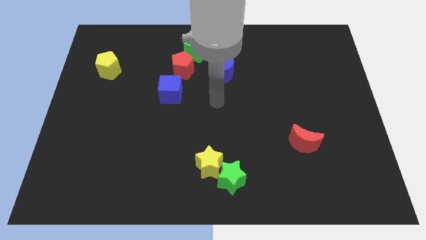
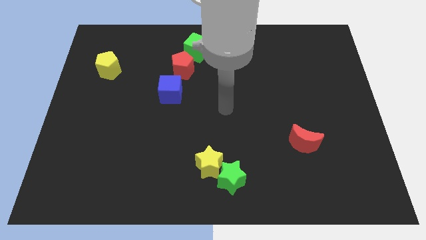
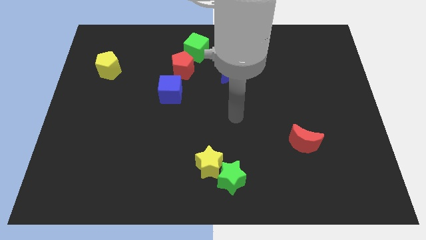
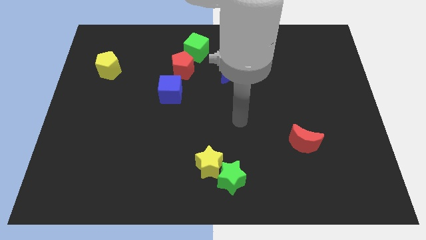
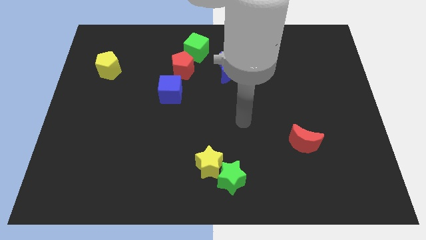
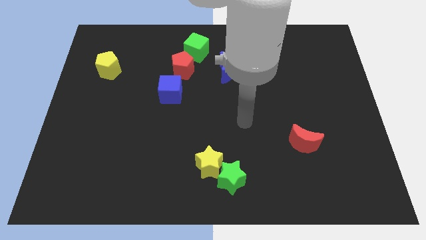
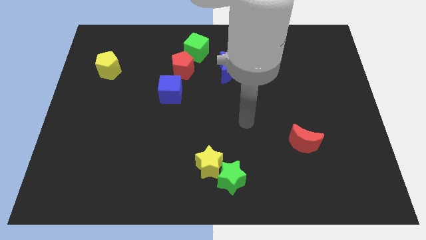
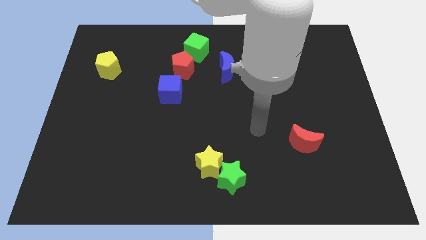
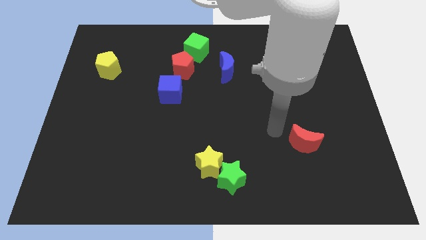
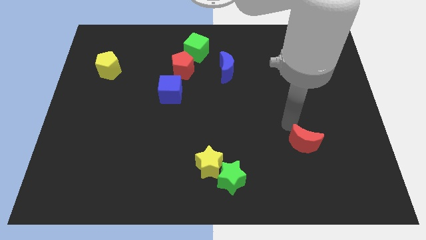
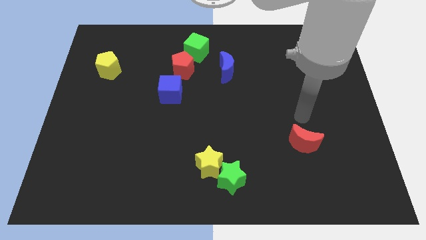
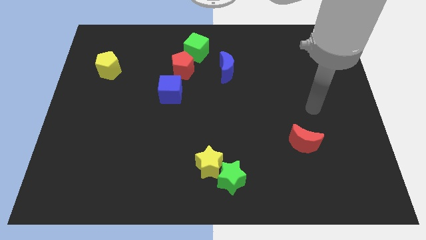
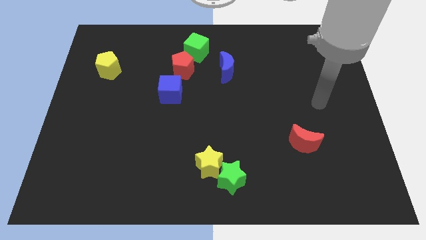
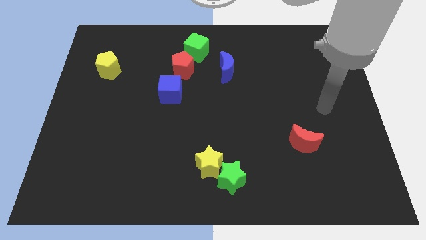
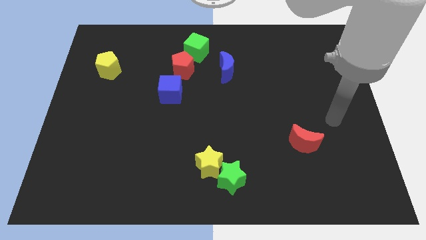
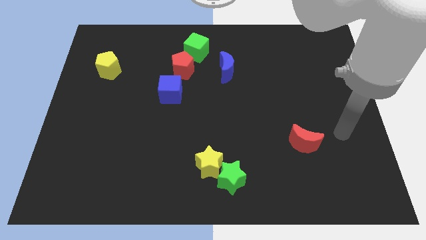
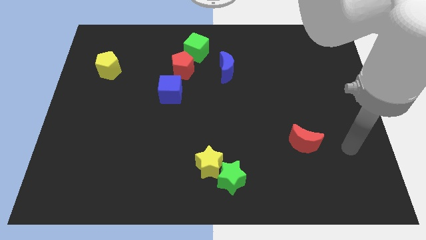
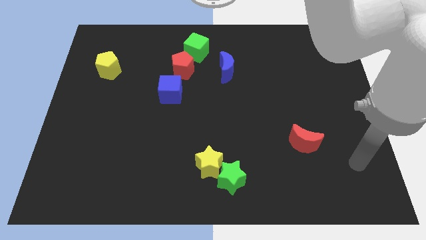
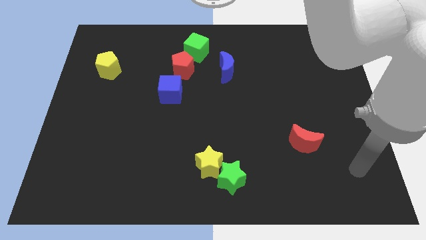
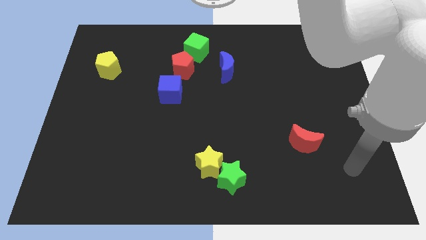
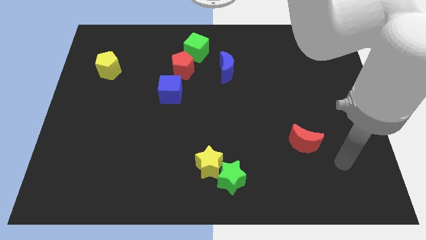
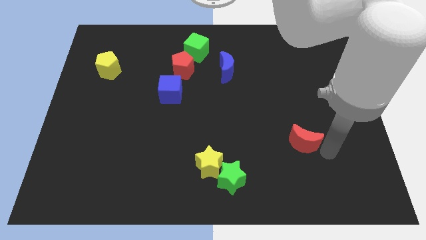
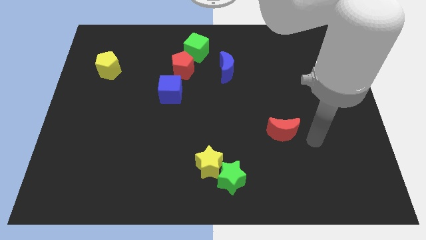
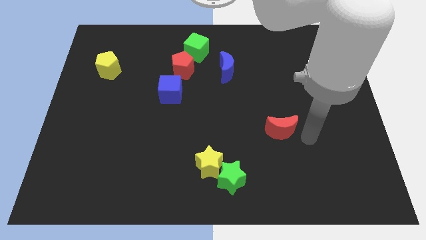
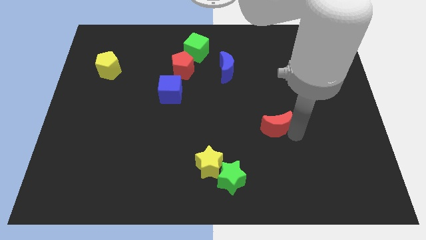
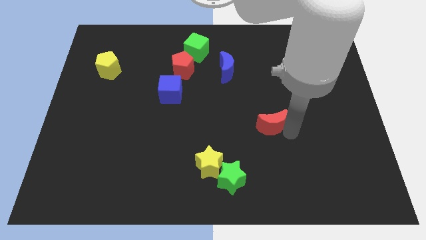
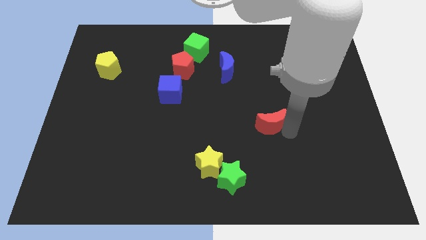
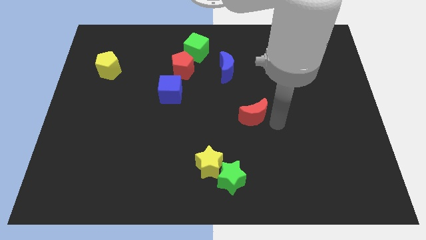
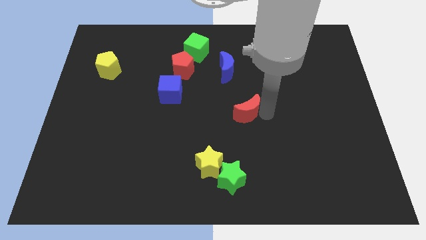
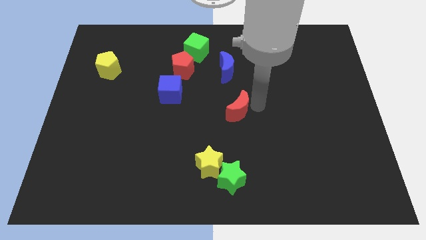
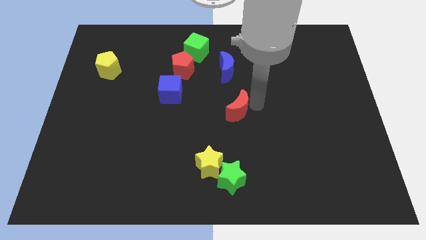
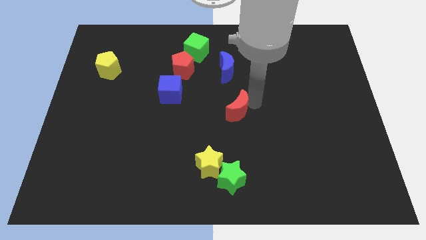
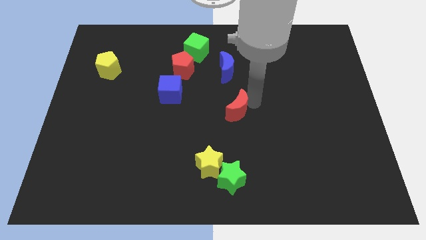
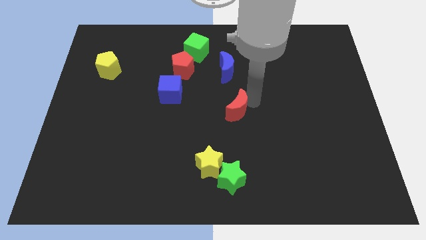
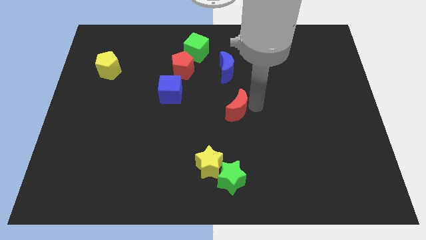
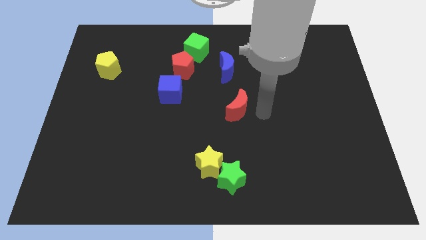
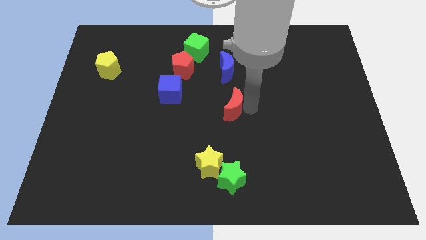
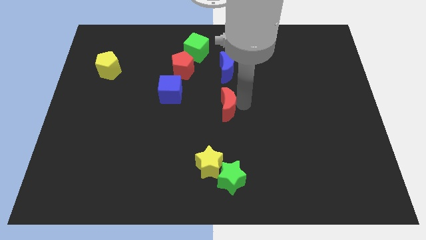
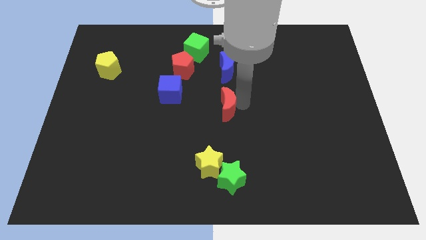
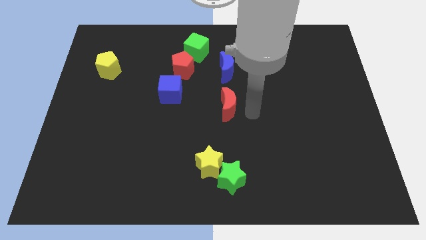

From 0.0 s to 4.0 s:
place the red crescent to the bottom side of the blue crescent

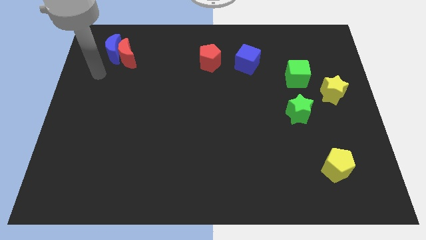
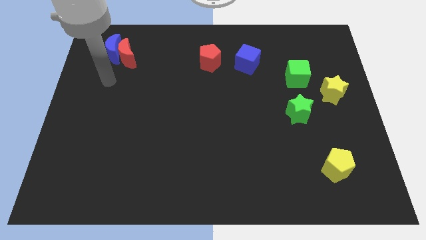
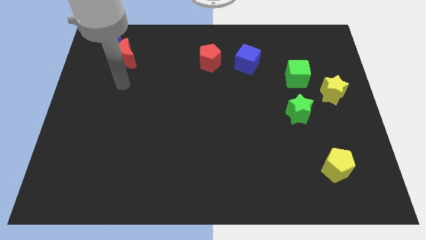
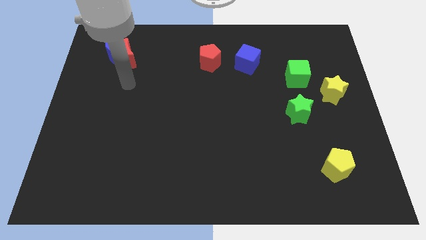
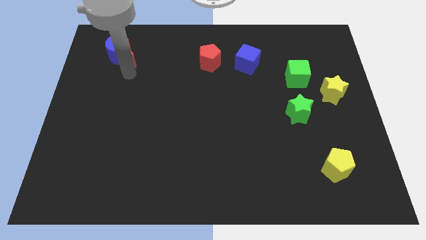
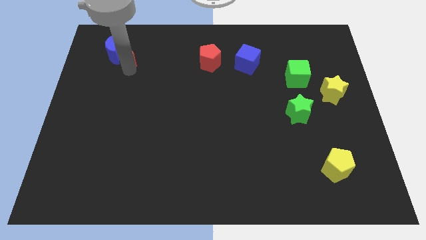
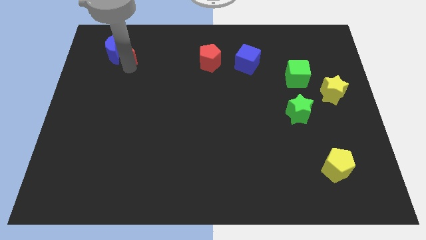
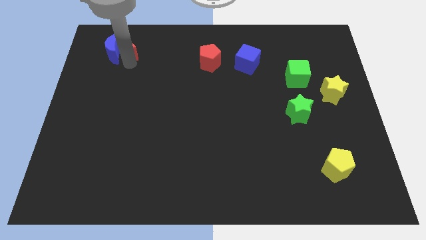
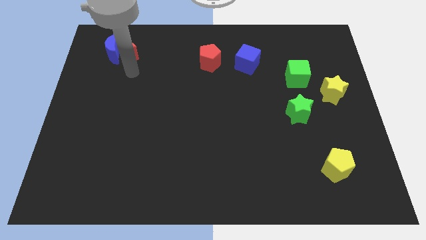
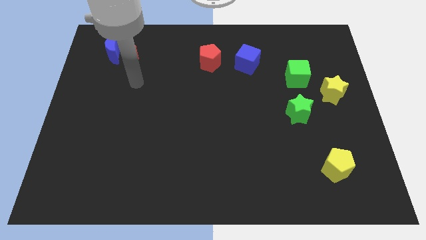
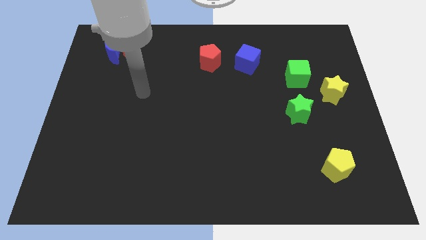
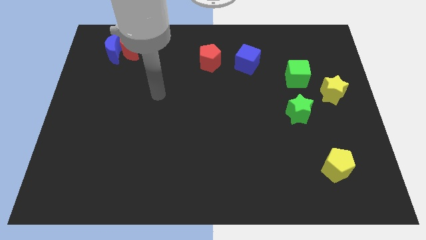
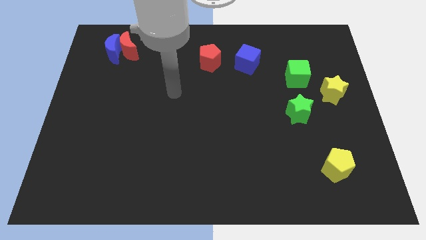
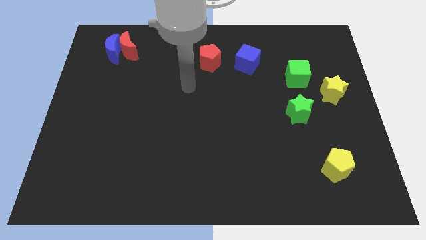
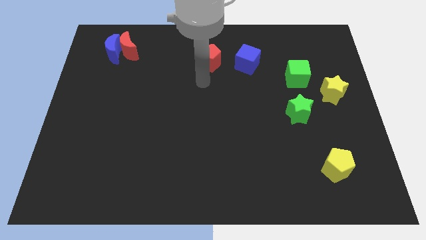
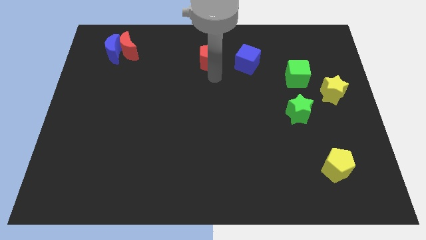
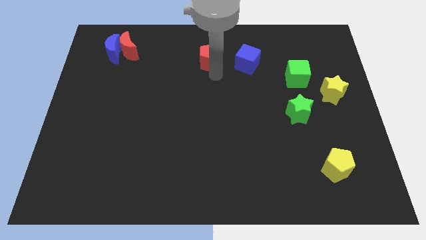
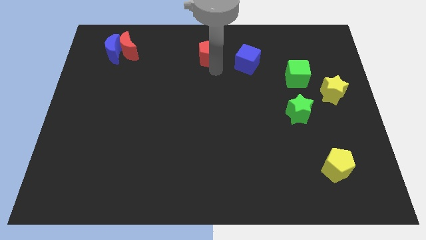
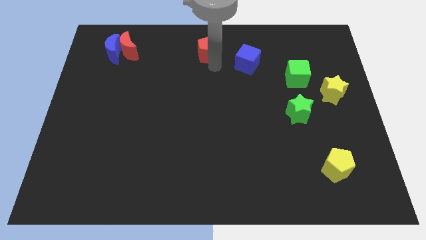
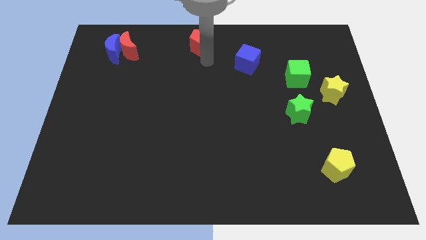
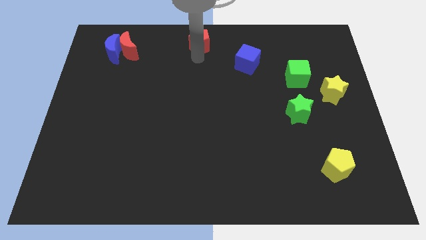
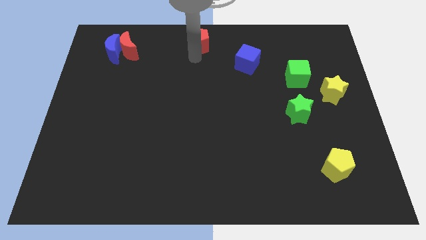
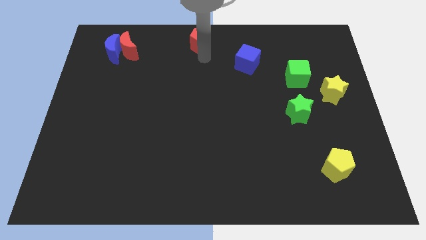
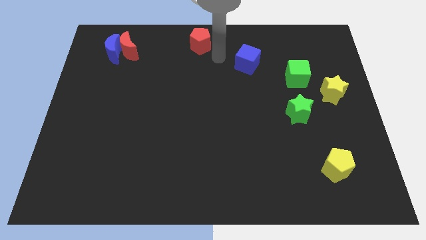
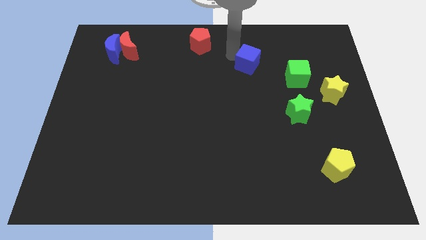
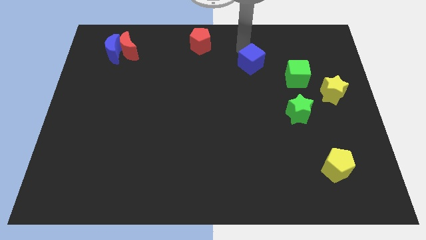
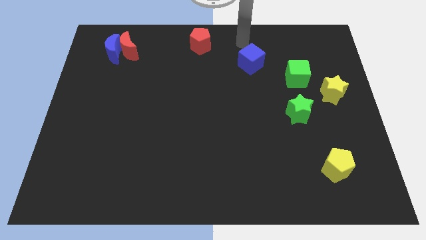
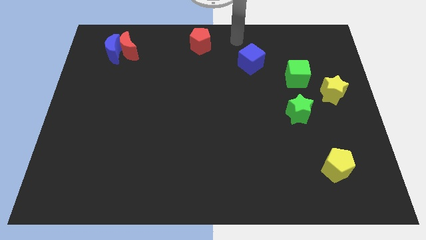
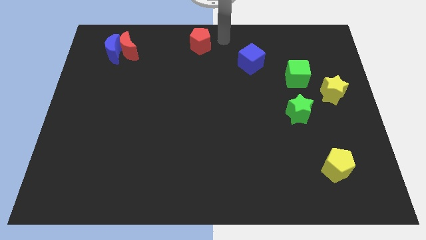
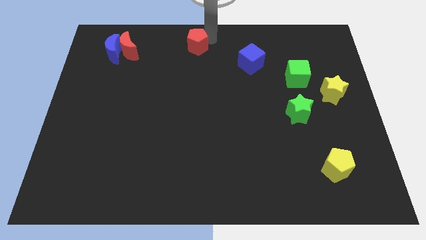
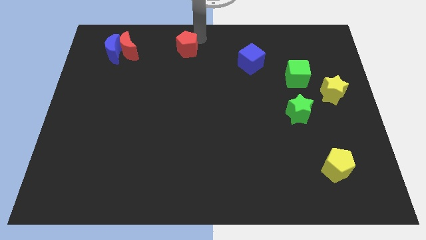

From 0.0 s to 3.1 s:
slide red pentagon to right of red moon

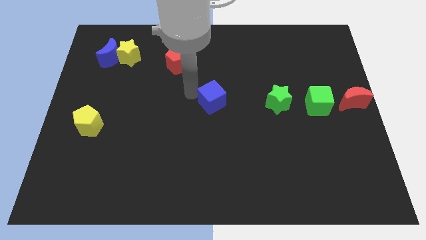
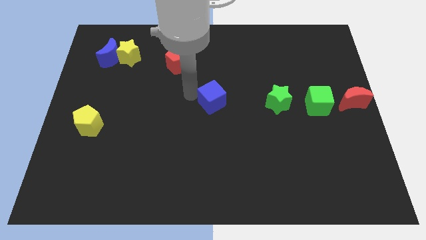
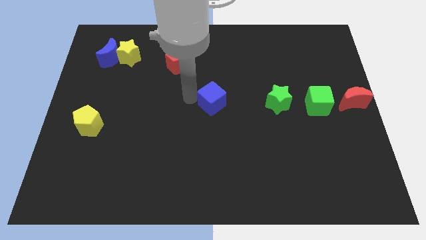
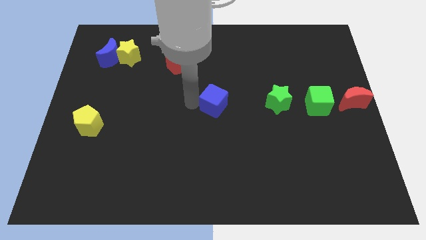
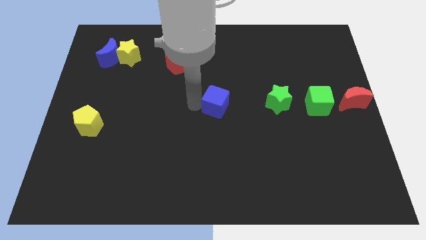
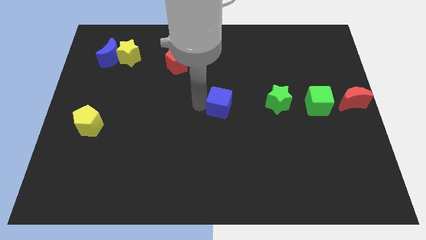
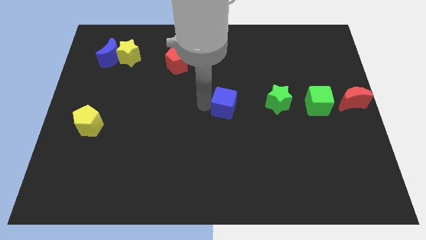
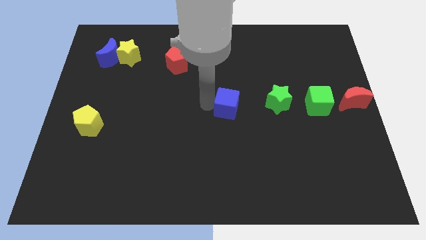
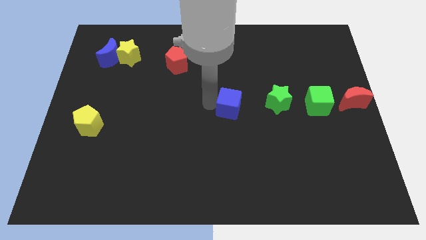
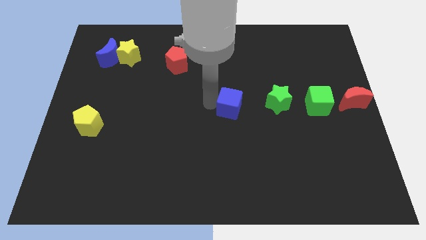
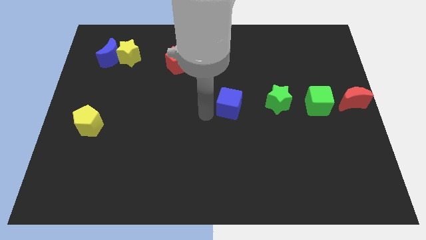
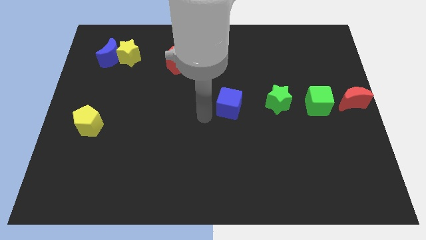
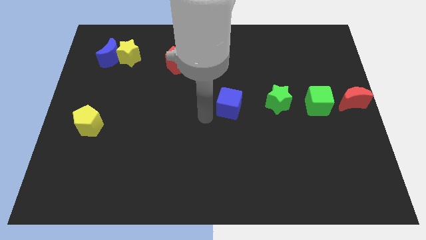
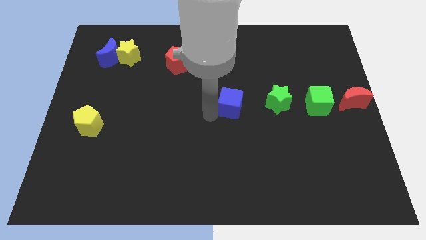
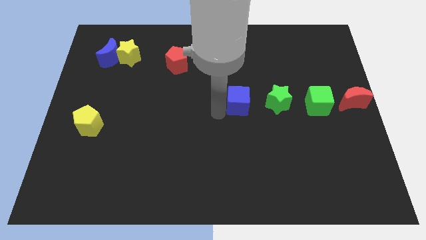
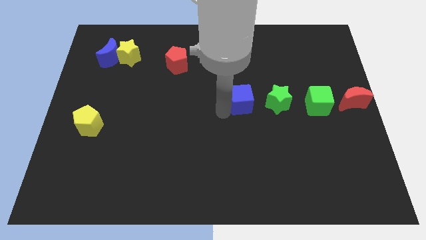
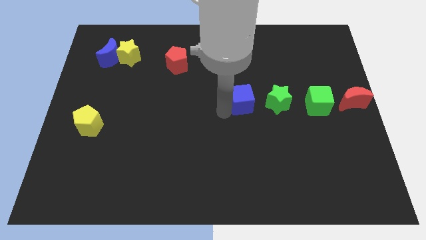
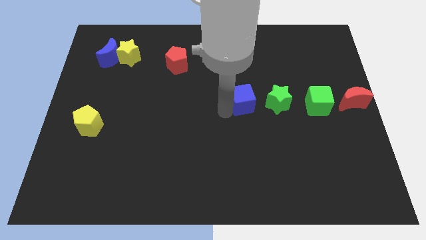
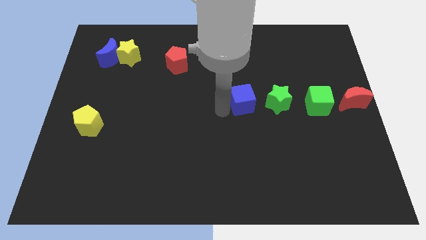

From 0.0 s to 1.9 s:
move the blue cube towards the green star
